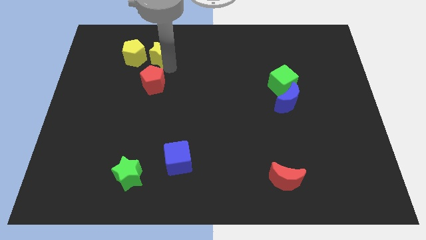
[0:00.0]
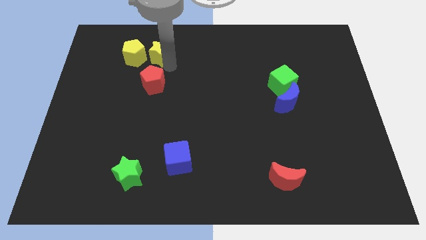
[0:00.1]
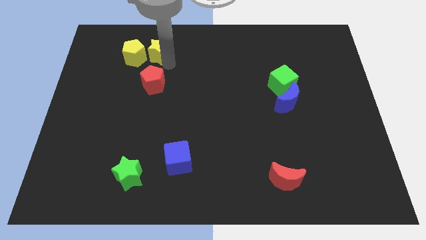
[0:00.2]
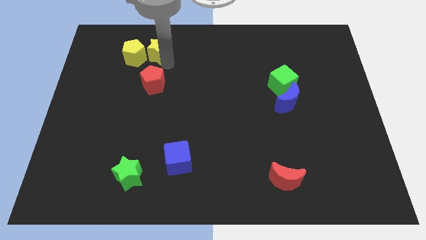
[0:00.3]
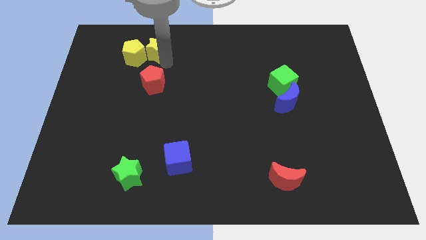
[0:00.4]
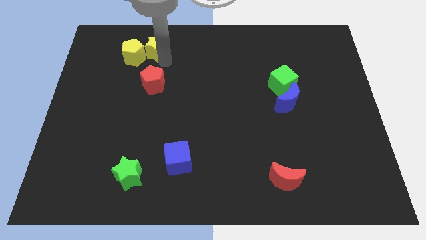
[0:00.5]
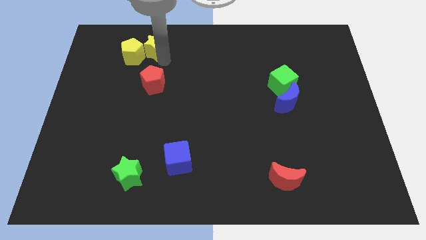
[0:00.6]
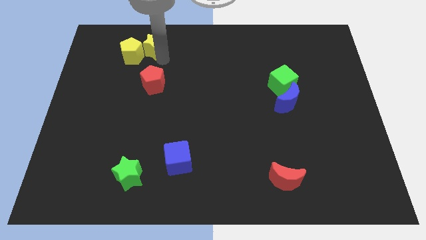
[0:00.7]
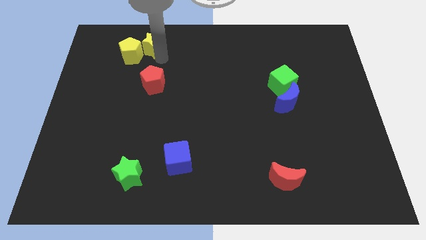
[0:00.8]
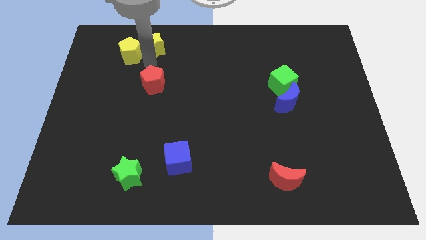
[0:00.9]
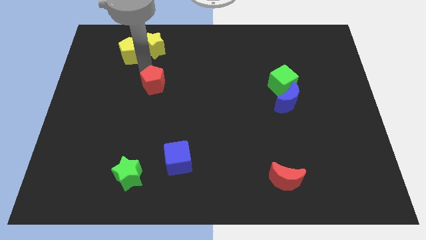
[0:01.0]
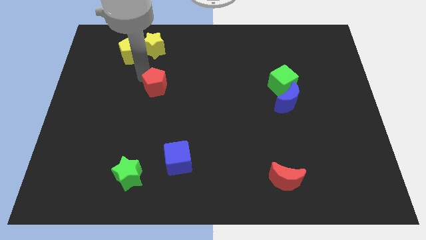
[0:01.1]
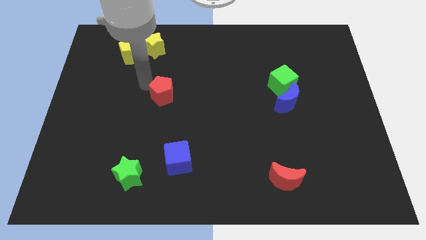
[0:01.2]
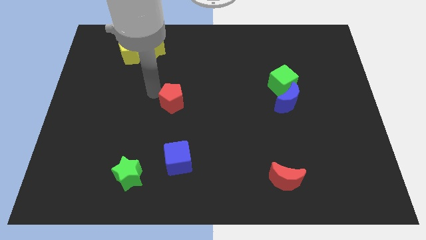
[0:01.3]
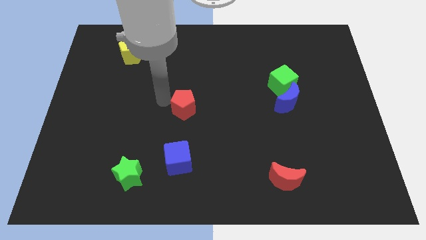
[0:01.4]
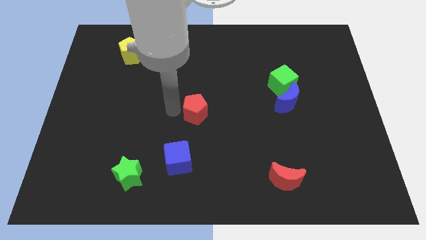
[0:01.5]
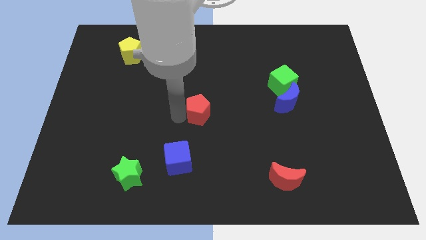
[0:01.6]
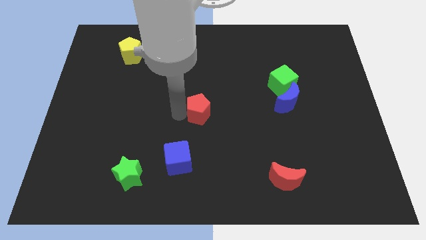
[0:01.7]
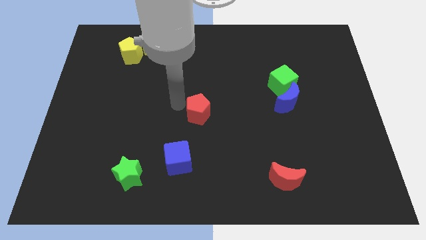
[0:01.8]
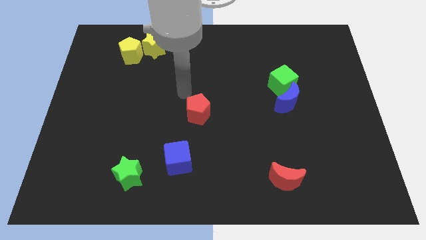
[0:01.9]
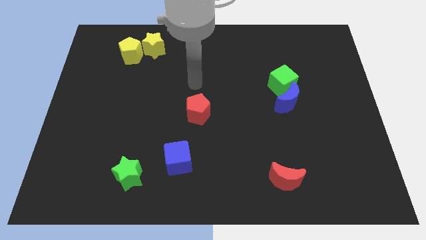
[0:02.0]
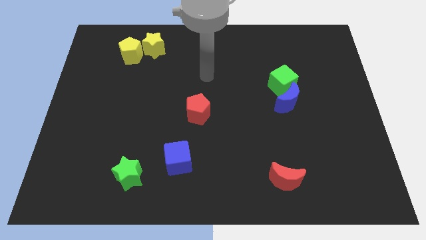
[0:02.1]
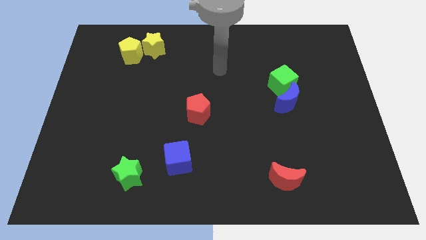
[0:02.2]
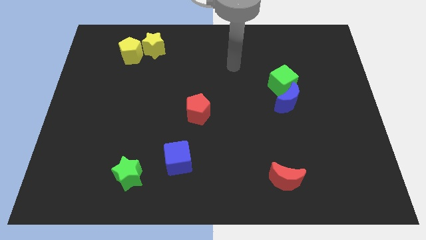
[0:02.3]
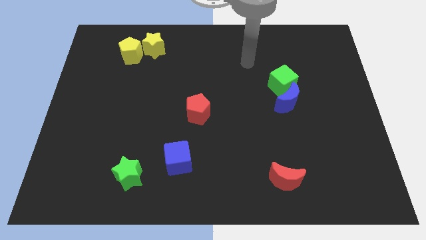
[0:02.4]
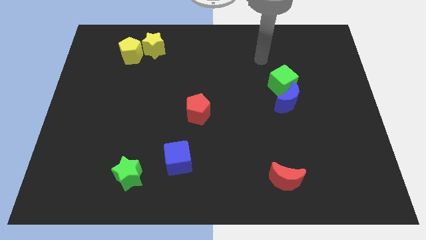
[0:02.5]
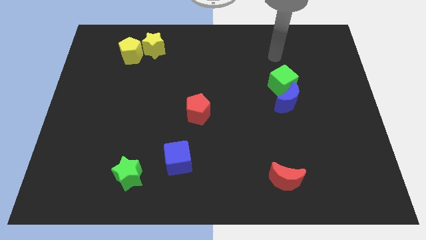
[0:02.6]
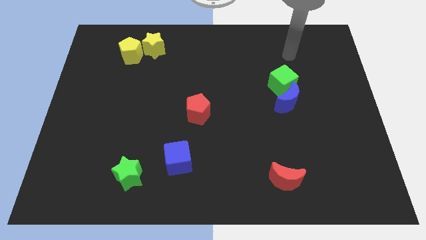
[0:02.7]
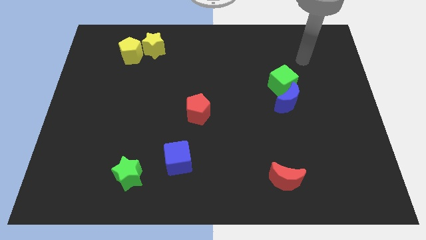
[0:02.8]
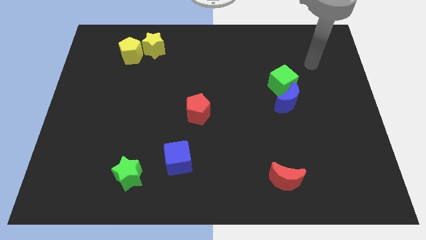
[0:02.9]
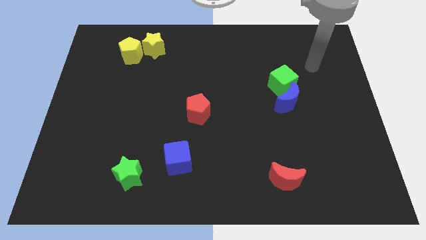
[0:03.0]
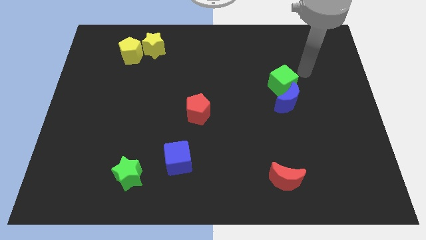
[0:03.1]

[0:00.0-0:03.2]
push the red pentagon to the center of the board

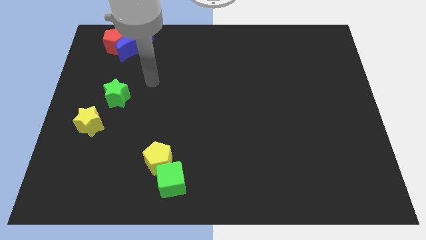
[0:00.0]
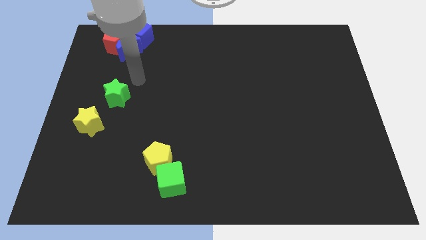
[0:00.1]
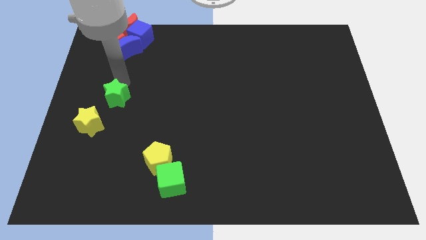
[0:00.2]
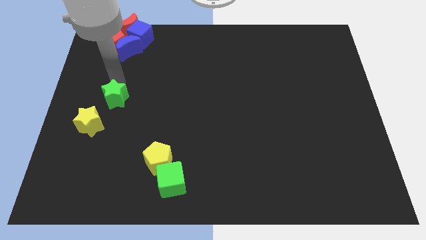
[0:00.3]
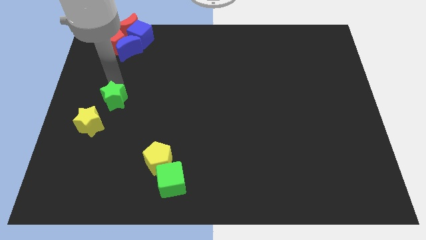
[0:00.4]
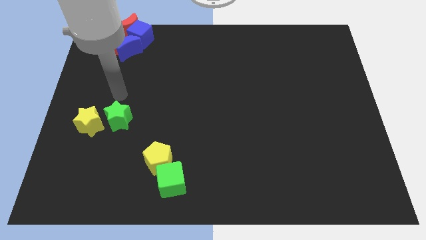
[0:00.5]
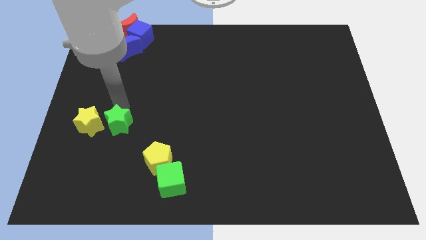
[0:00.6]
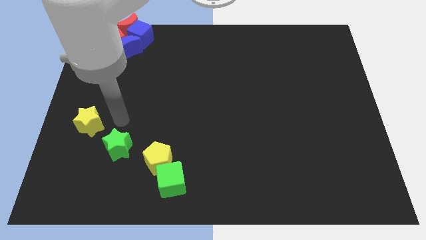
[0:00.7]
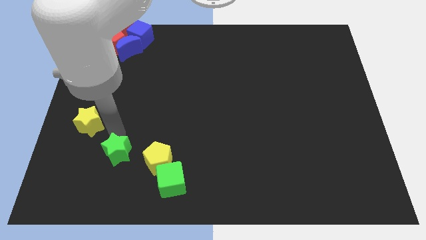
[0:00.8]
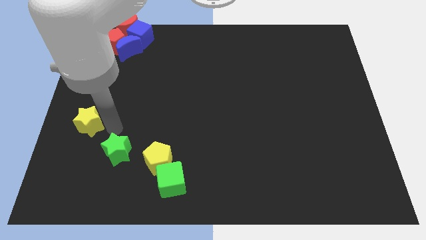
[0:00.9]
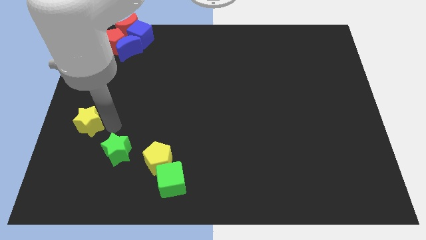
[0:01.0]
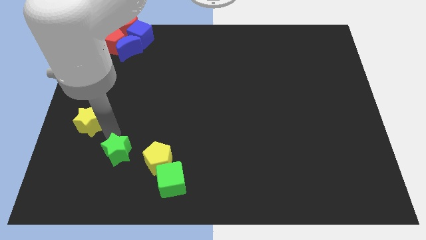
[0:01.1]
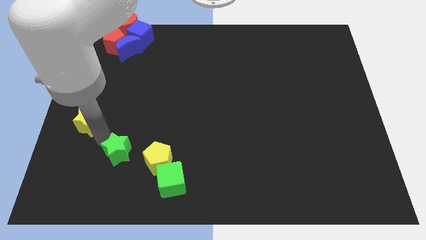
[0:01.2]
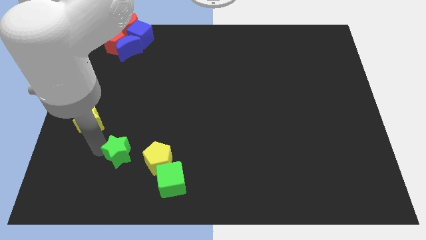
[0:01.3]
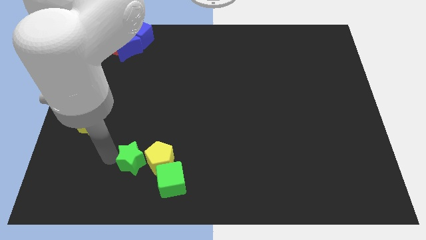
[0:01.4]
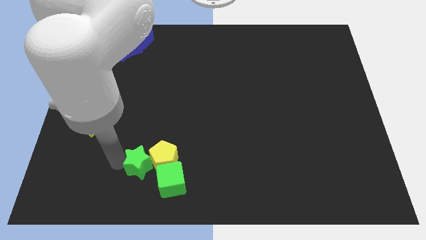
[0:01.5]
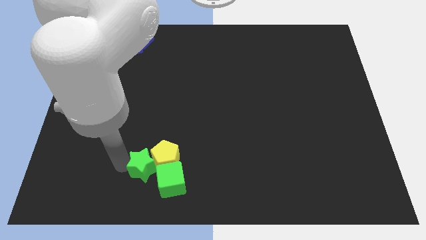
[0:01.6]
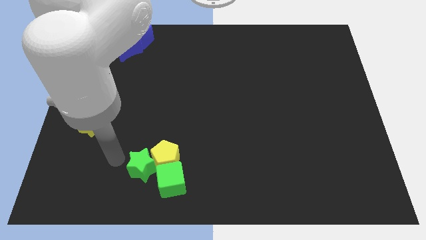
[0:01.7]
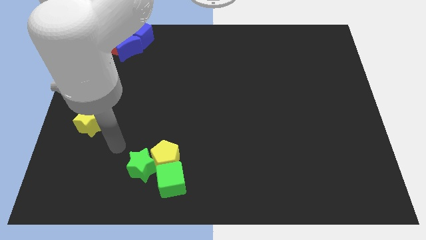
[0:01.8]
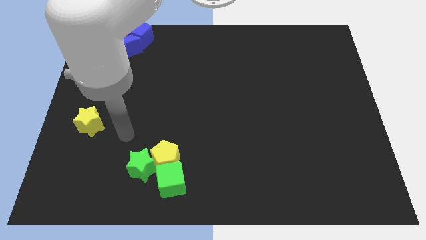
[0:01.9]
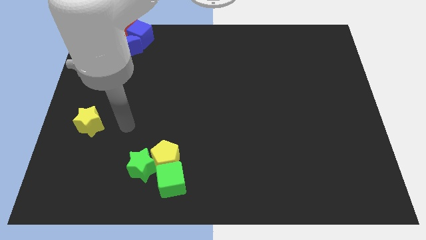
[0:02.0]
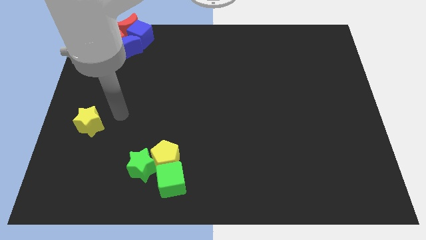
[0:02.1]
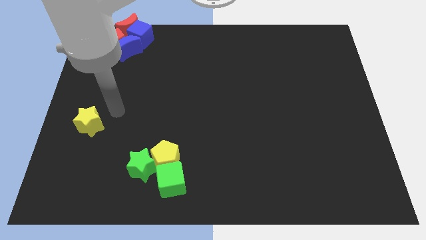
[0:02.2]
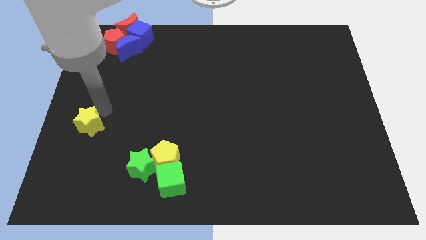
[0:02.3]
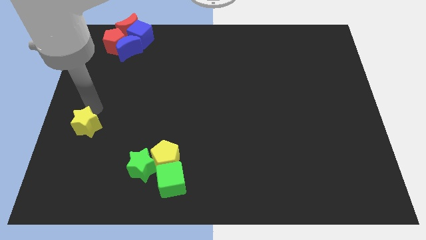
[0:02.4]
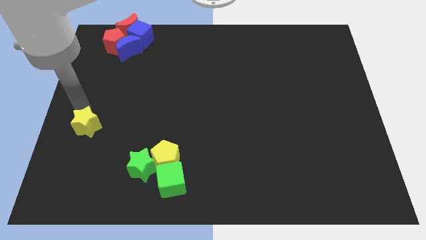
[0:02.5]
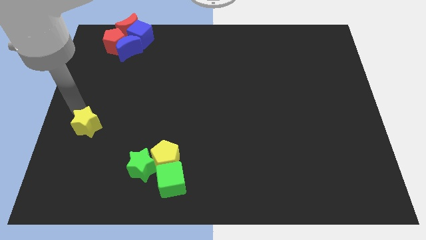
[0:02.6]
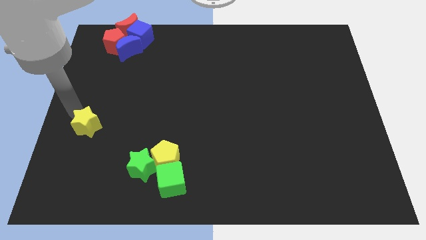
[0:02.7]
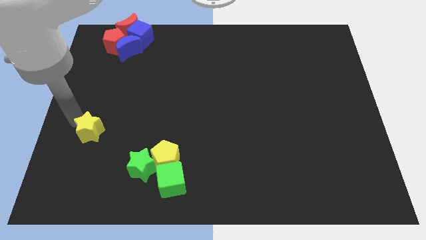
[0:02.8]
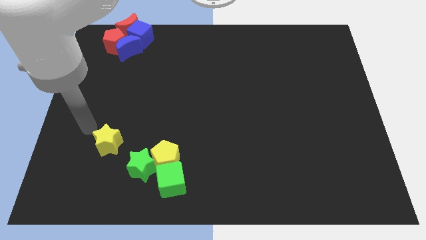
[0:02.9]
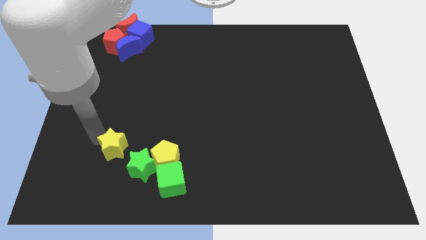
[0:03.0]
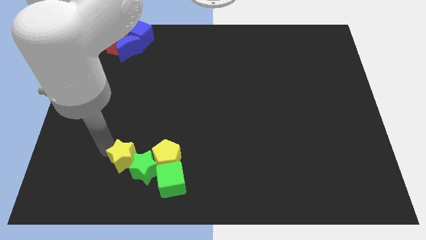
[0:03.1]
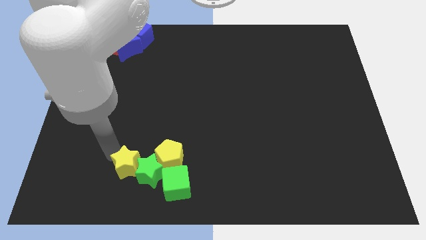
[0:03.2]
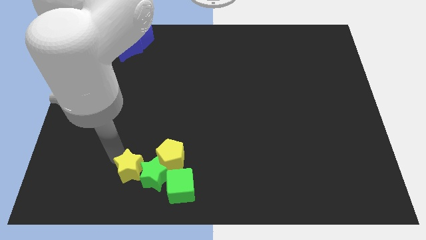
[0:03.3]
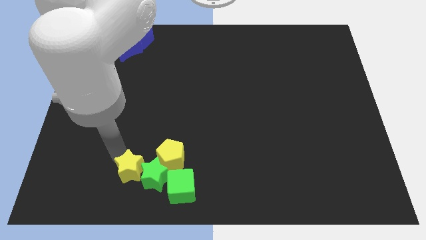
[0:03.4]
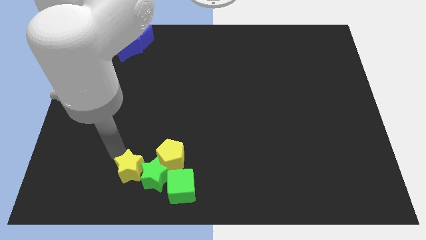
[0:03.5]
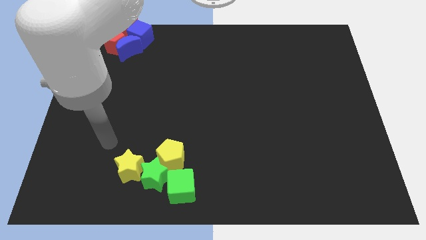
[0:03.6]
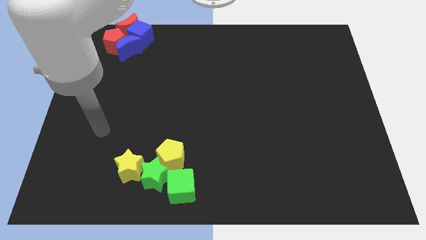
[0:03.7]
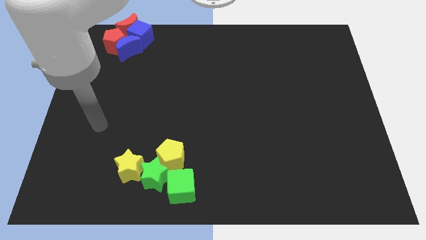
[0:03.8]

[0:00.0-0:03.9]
move the green and yellow stars into the yellow pentagon and the green cube

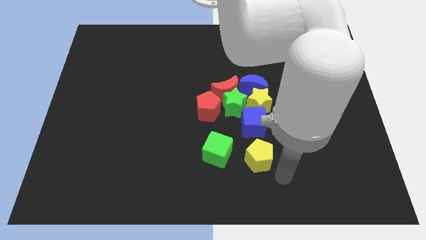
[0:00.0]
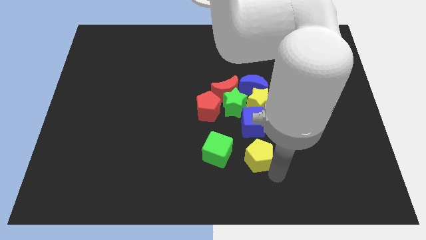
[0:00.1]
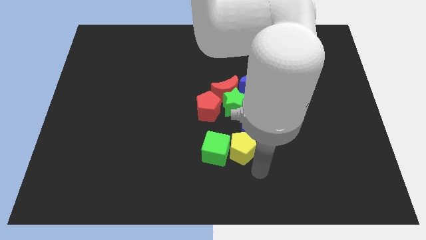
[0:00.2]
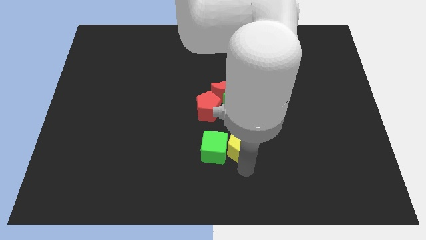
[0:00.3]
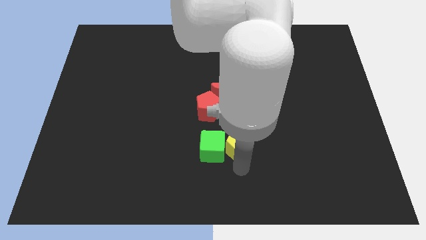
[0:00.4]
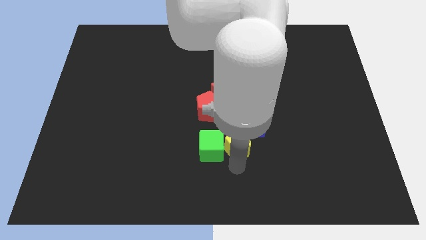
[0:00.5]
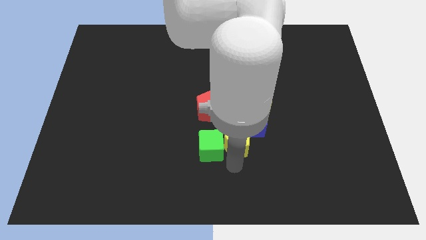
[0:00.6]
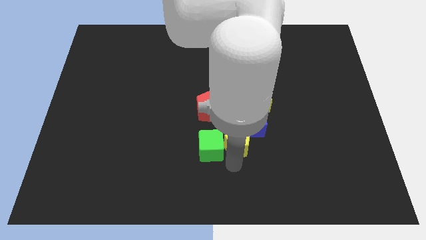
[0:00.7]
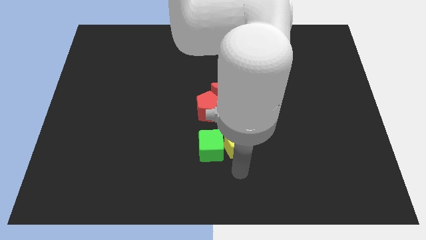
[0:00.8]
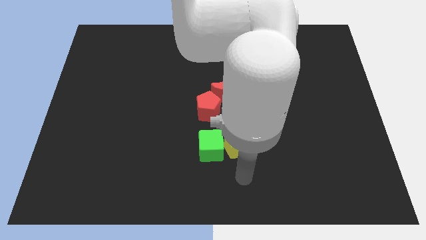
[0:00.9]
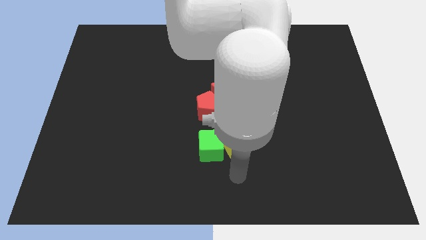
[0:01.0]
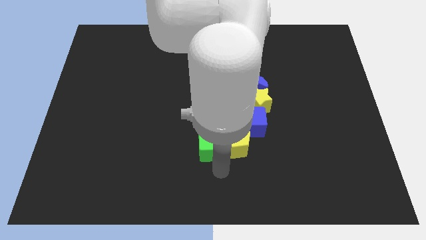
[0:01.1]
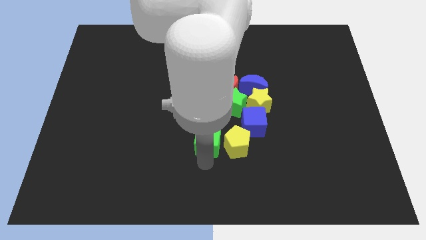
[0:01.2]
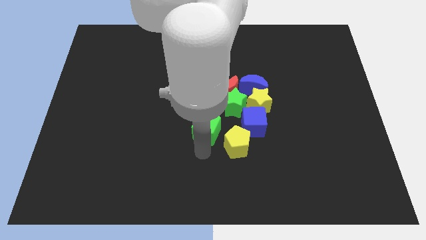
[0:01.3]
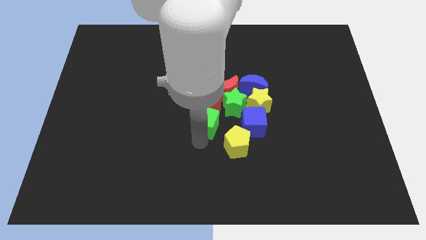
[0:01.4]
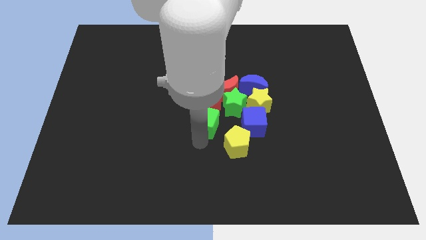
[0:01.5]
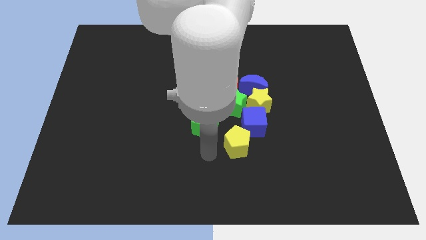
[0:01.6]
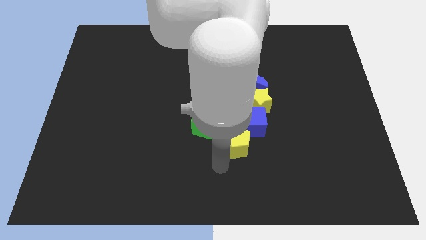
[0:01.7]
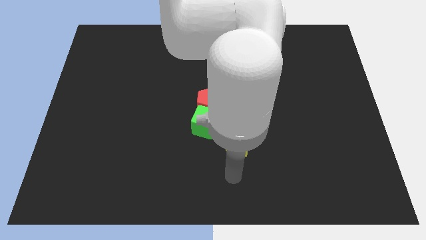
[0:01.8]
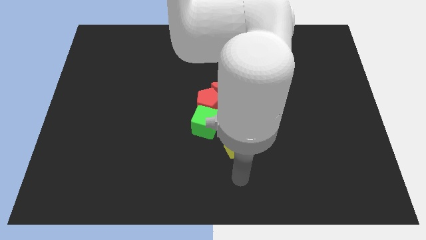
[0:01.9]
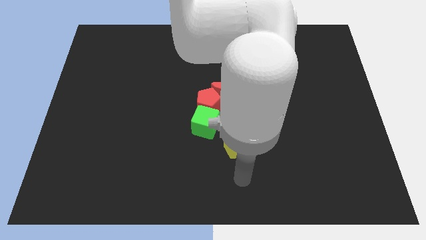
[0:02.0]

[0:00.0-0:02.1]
push green cube below the red pentagon
